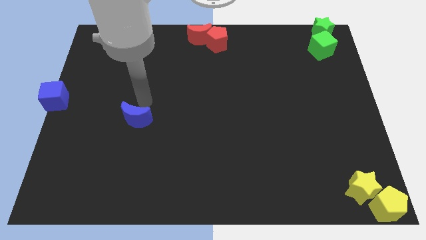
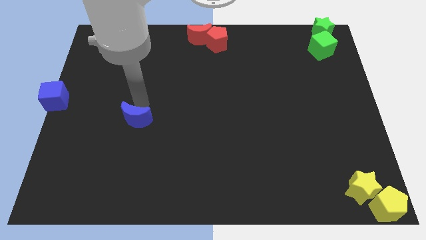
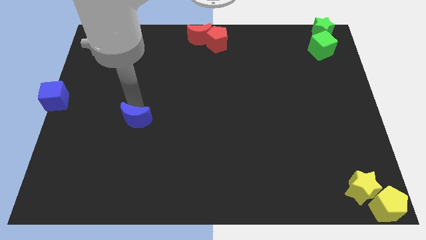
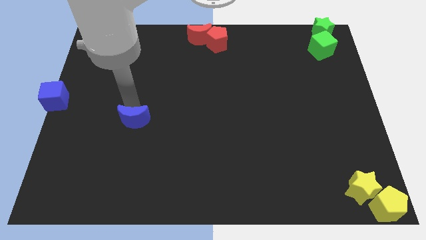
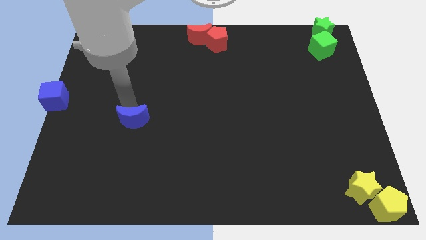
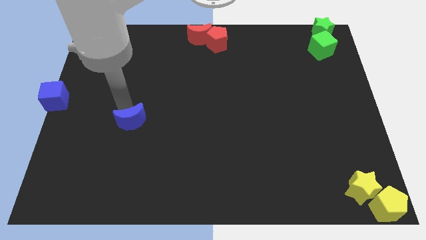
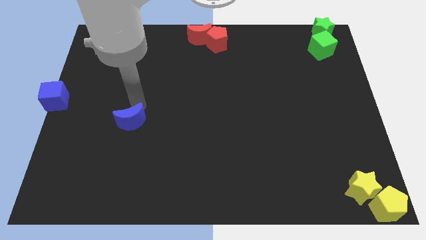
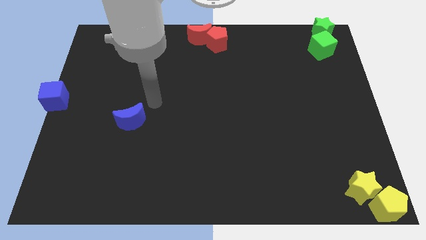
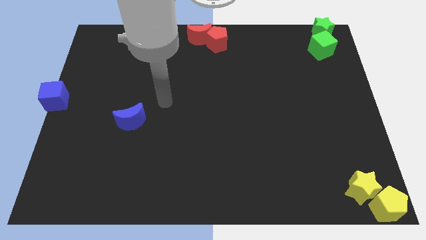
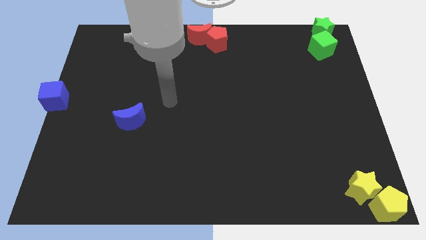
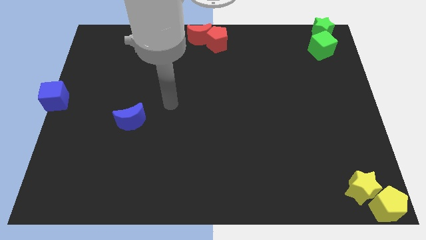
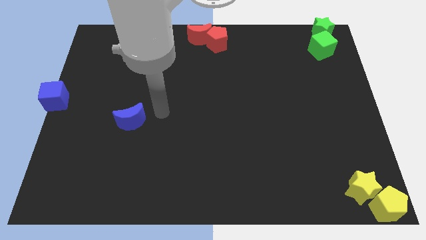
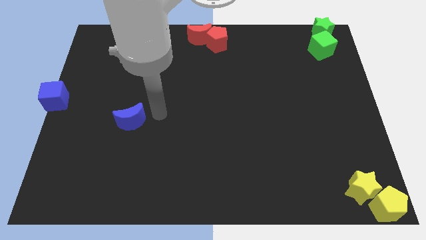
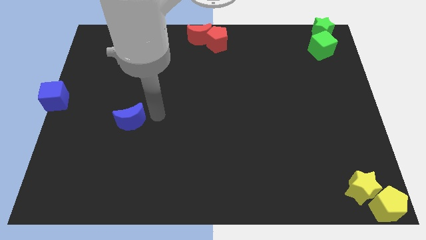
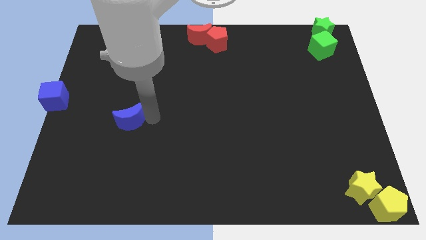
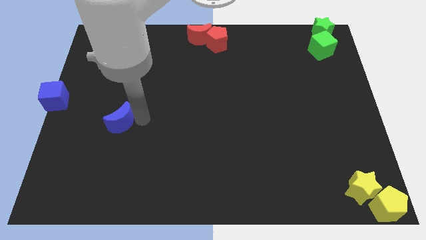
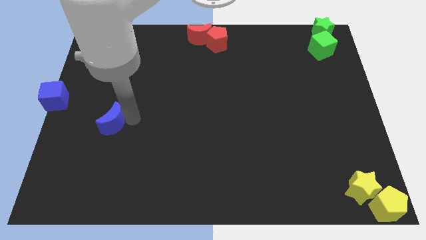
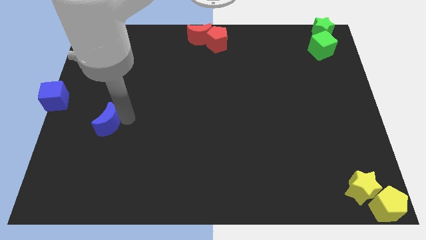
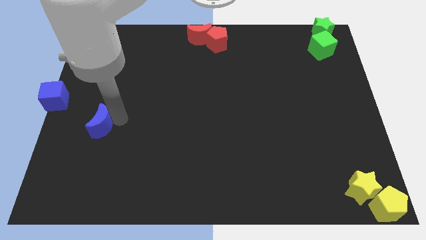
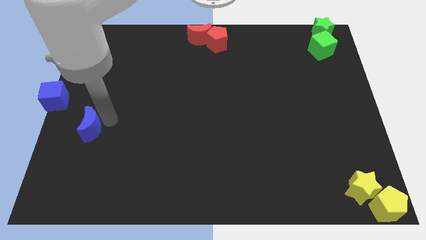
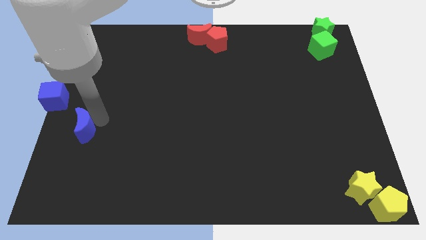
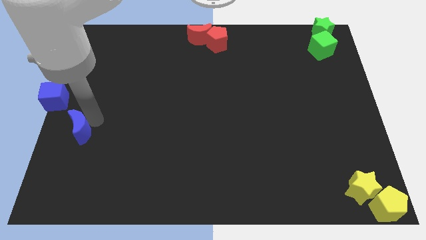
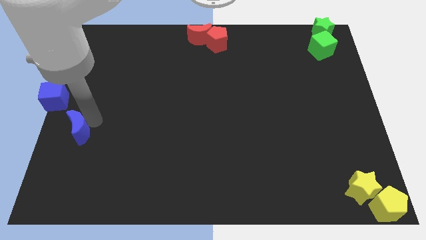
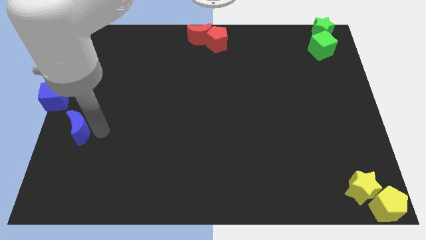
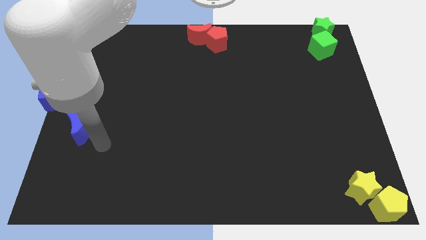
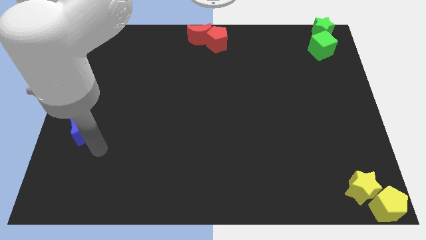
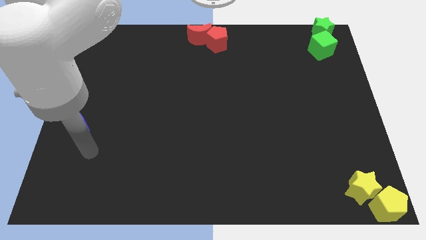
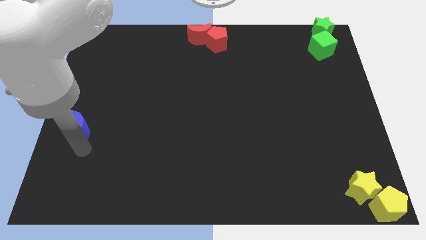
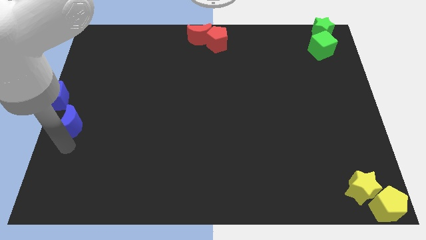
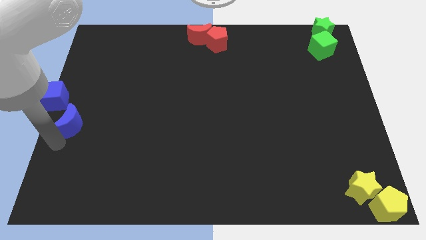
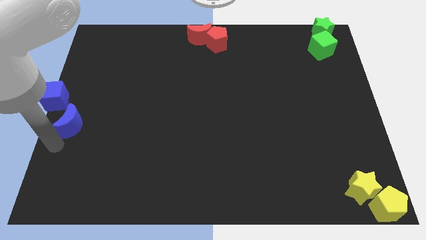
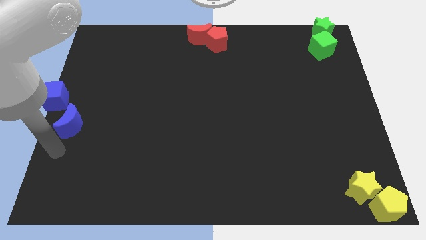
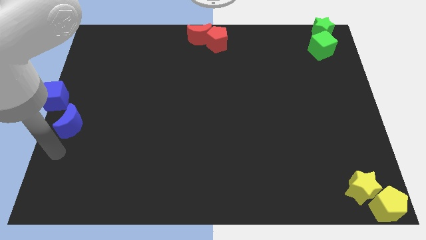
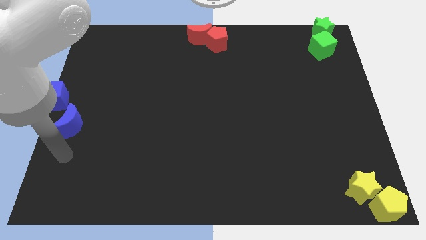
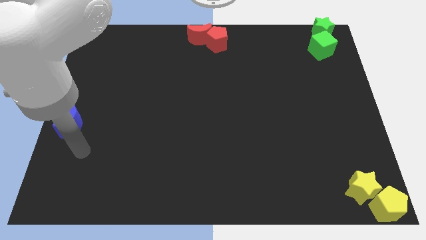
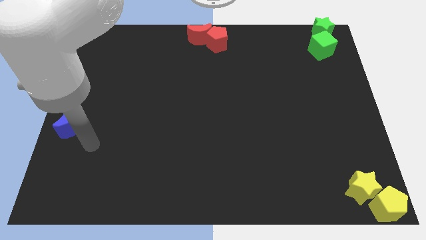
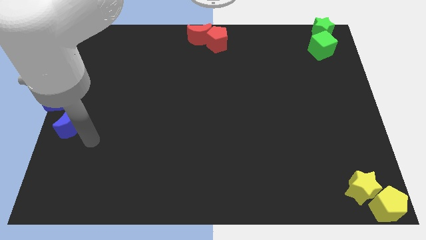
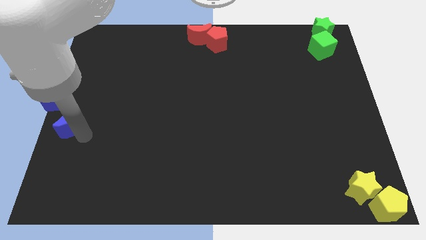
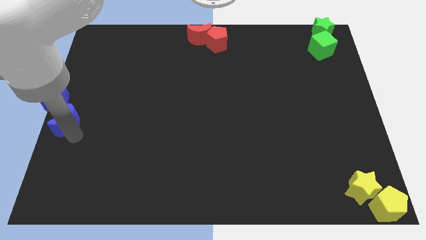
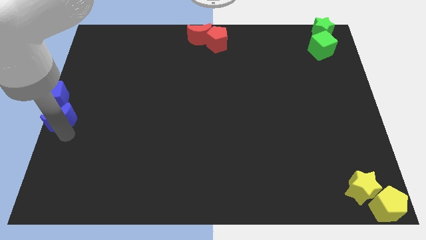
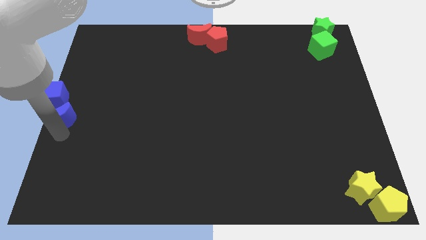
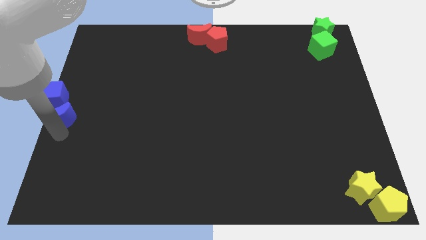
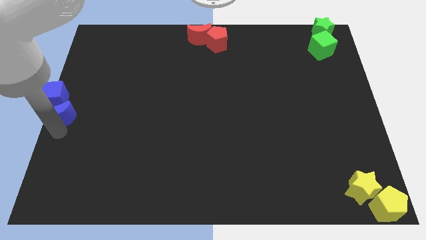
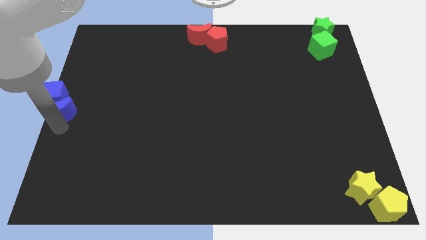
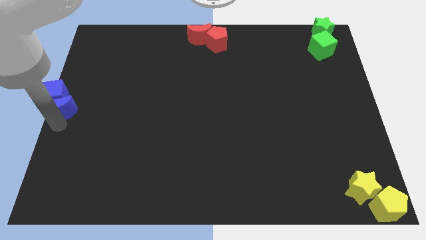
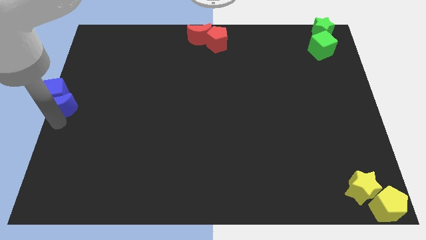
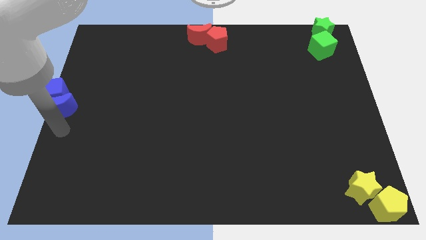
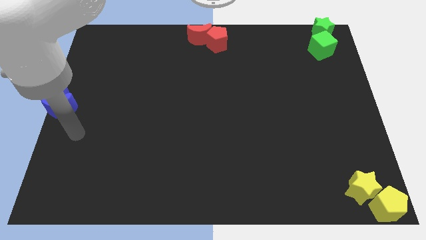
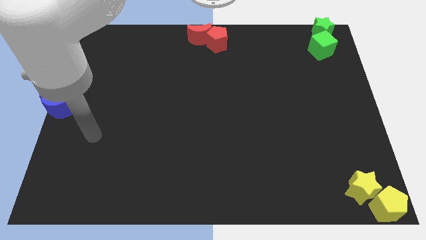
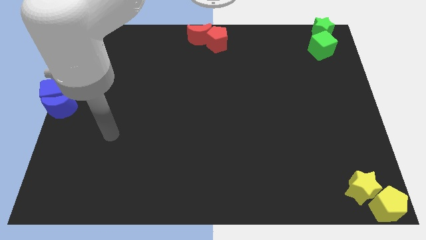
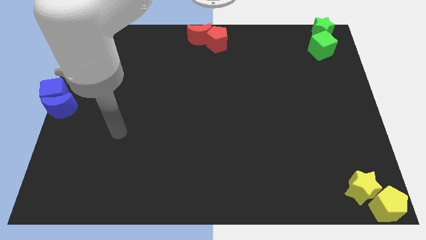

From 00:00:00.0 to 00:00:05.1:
move the blue crescent to the left side of the blue cube

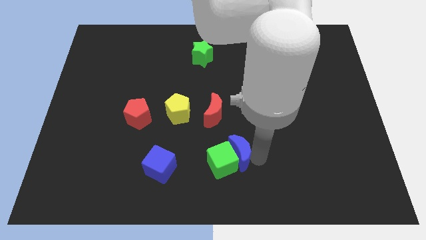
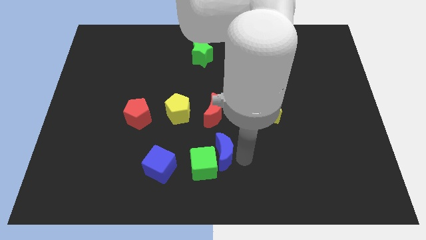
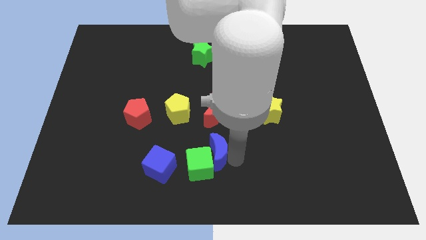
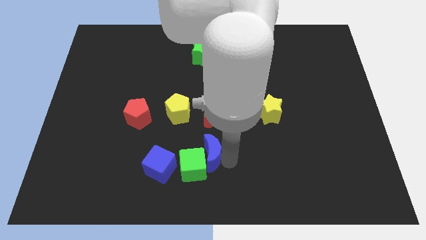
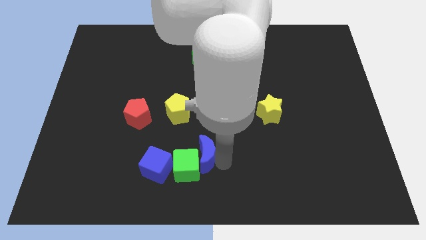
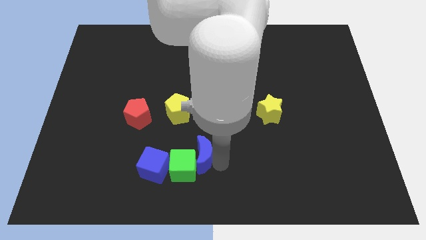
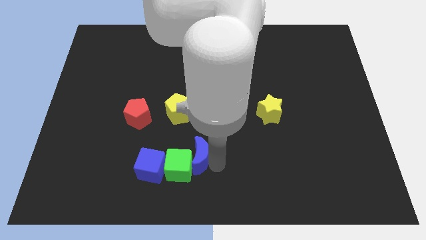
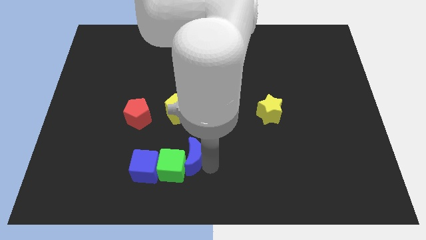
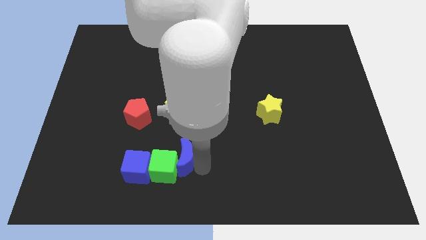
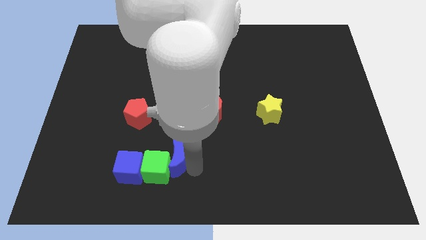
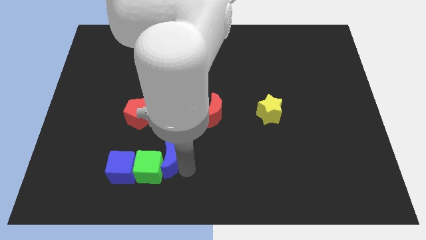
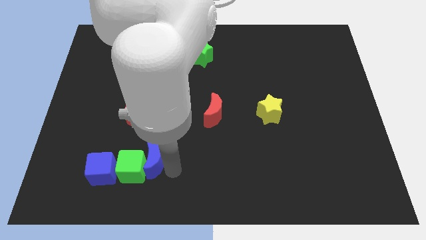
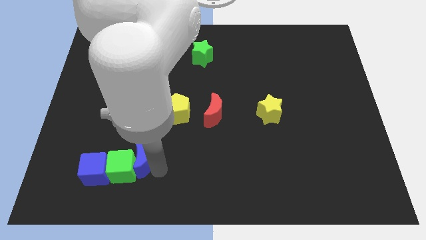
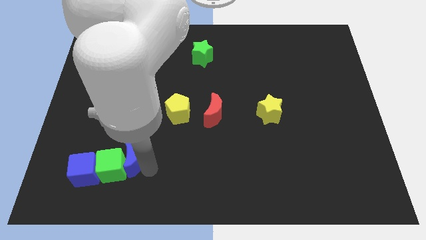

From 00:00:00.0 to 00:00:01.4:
move the blue moon blue cube and the green cube to the left side of the board

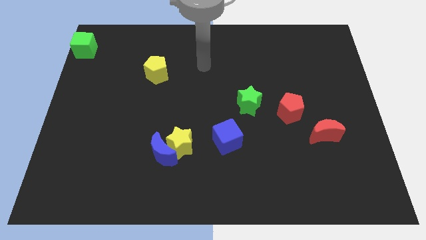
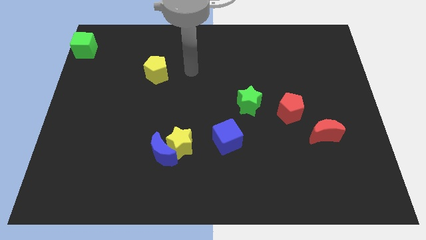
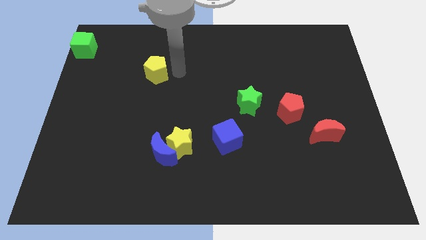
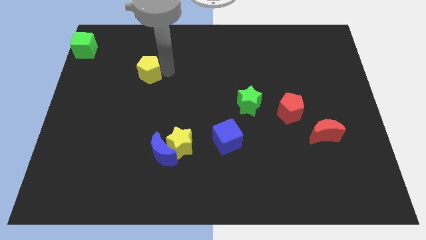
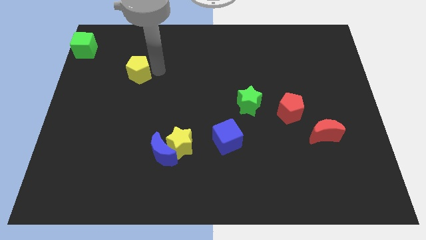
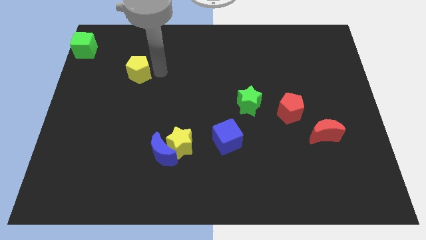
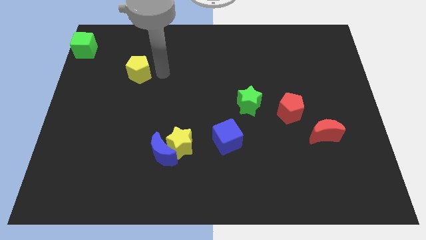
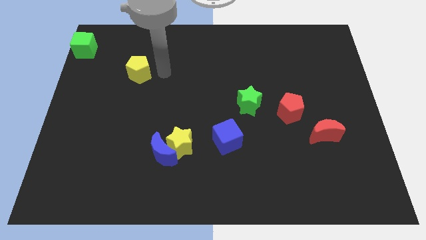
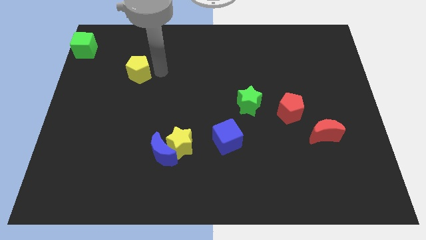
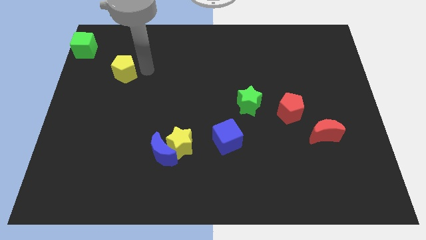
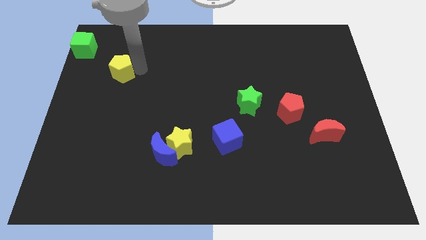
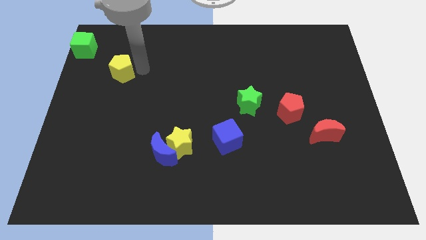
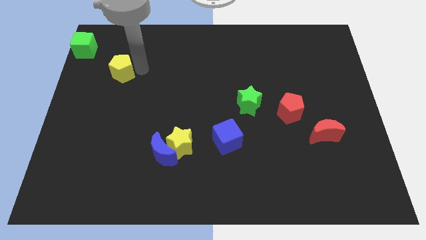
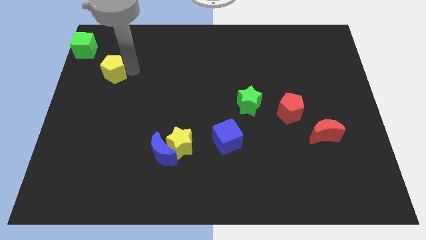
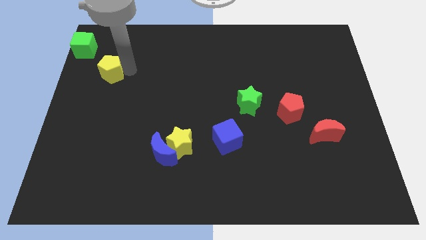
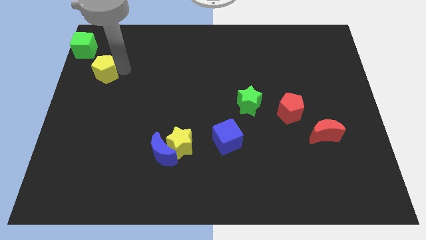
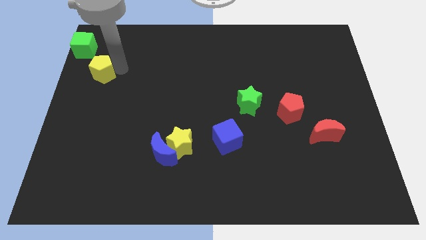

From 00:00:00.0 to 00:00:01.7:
move the yellow pentagon to the left side of the board

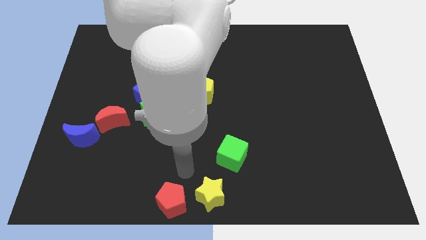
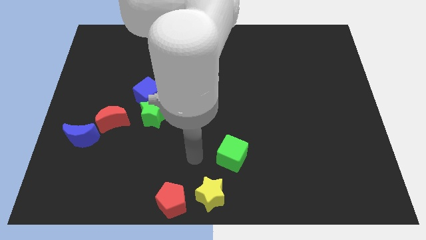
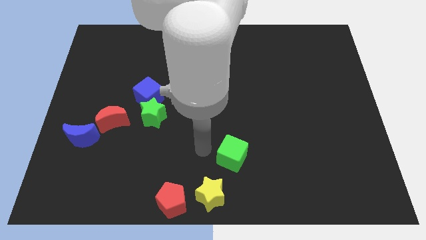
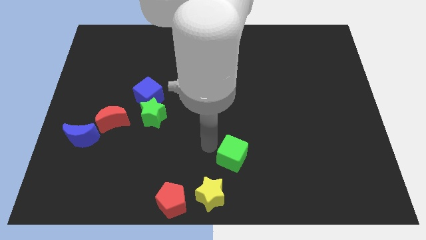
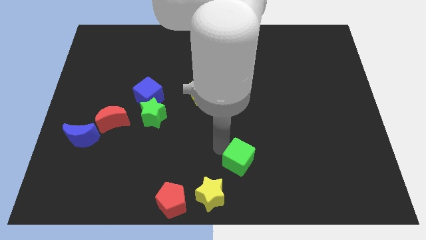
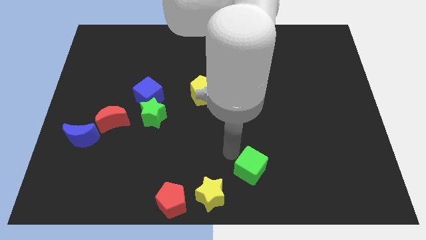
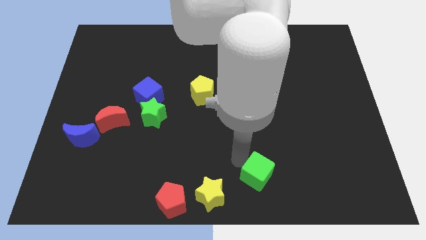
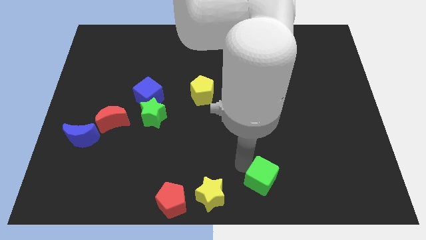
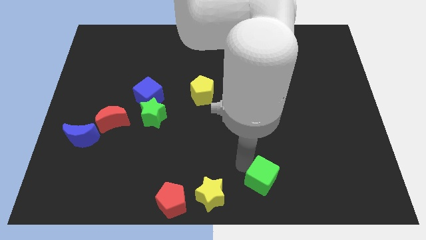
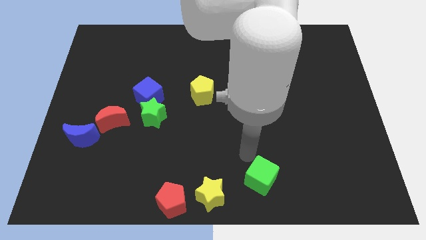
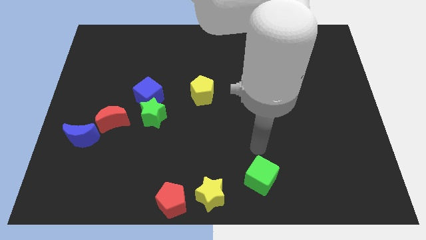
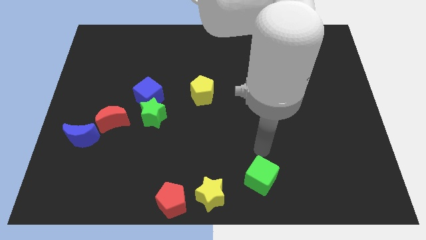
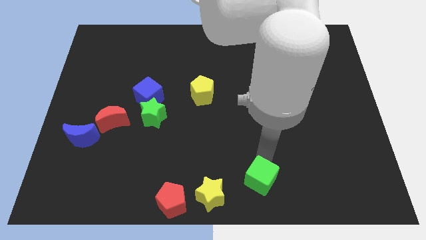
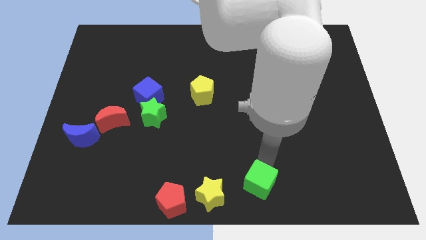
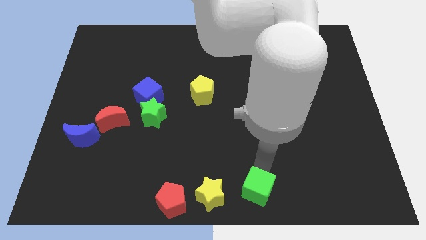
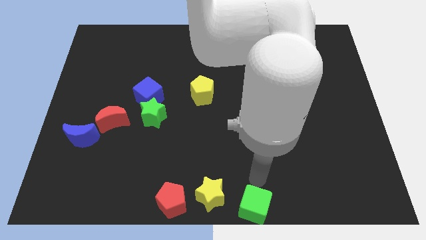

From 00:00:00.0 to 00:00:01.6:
place the green cube at the bottom center of the board
